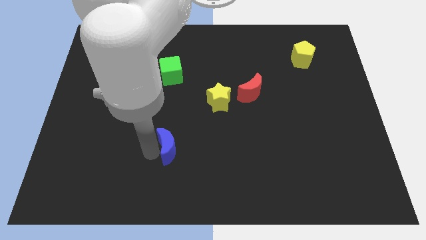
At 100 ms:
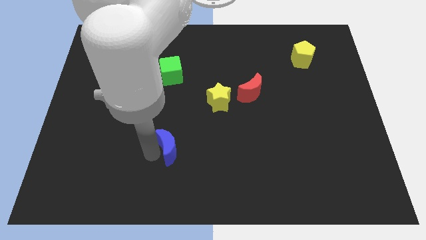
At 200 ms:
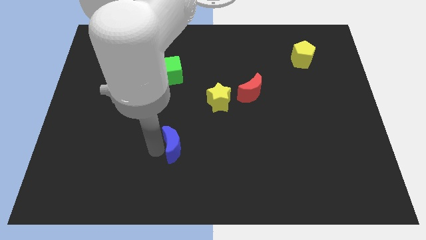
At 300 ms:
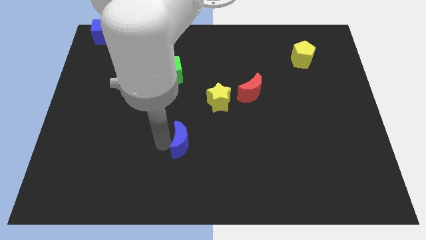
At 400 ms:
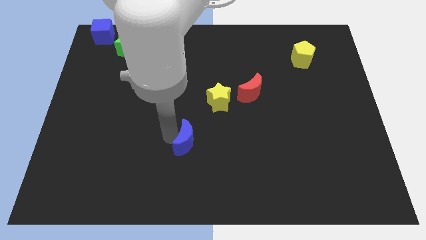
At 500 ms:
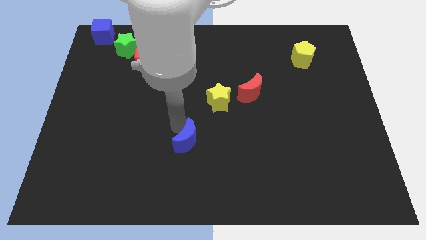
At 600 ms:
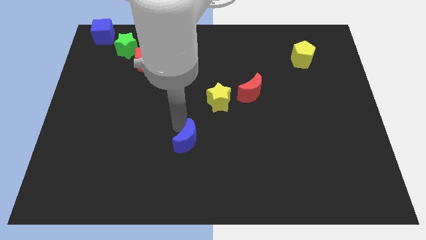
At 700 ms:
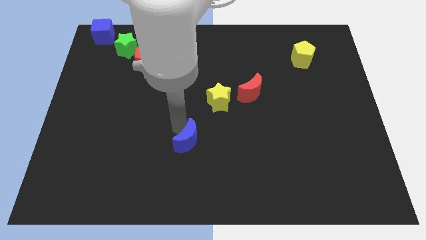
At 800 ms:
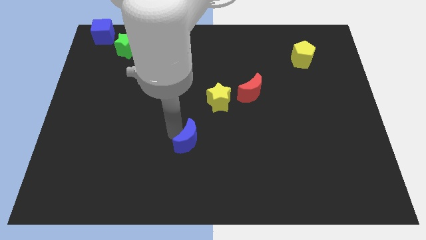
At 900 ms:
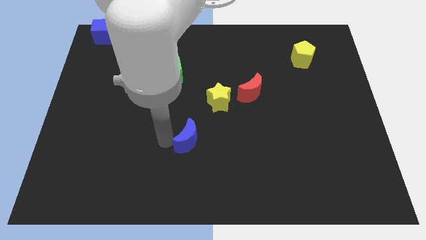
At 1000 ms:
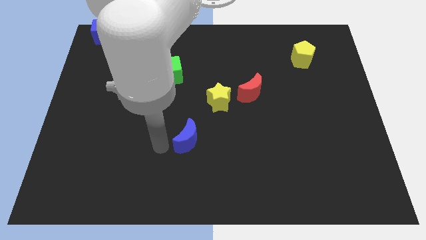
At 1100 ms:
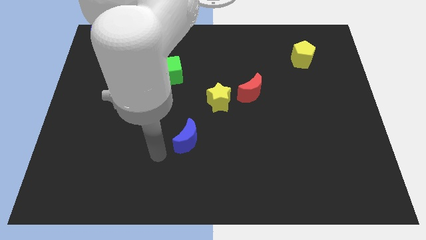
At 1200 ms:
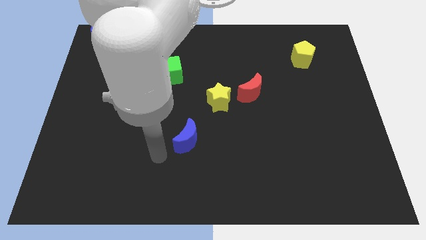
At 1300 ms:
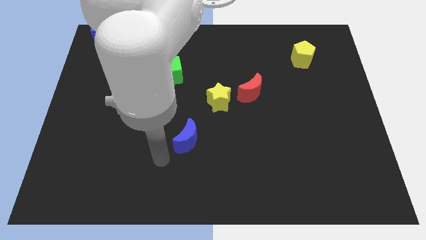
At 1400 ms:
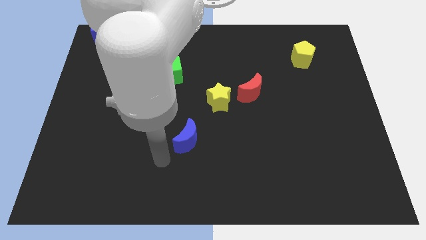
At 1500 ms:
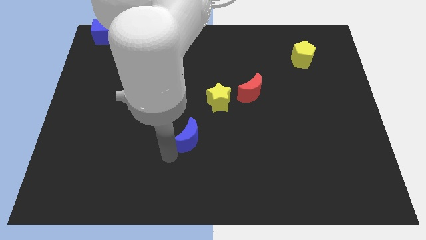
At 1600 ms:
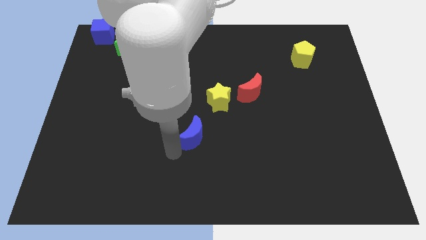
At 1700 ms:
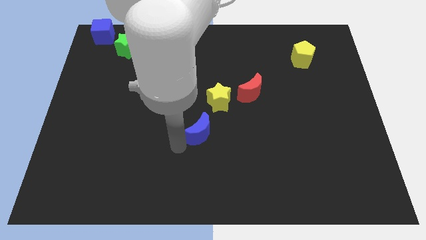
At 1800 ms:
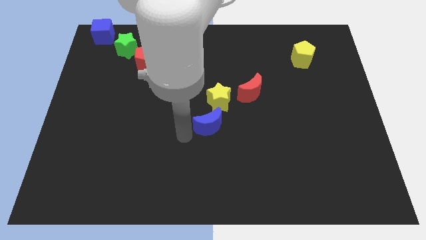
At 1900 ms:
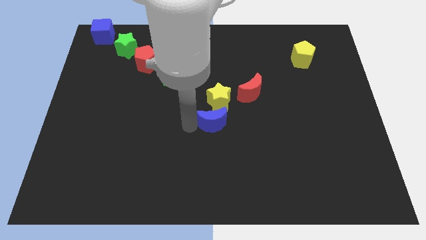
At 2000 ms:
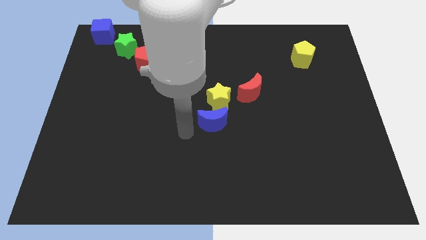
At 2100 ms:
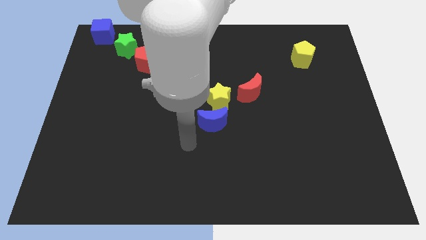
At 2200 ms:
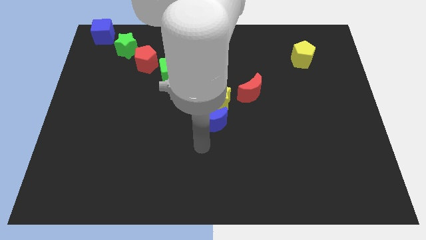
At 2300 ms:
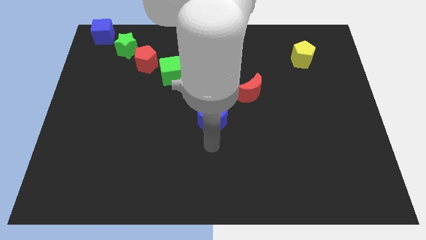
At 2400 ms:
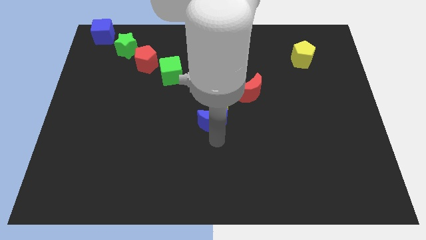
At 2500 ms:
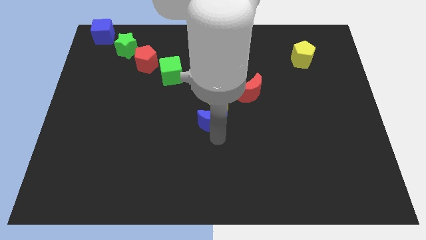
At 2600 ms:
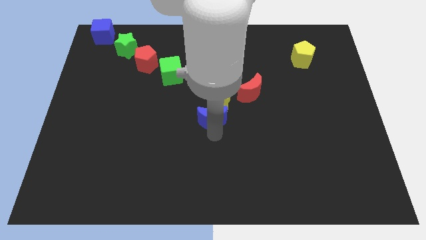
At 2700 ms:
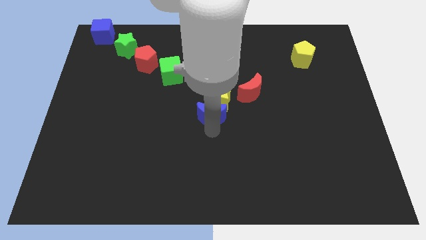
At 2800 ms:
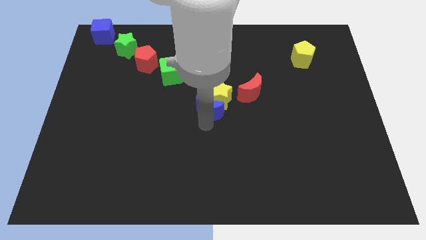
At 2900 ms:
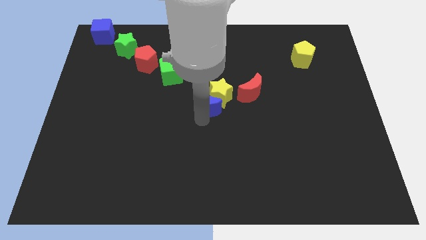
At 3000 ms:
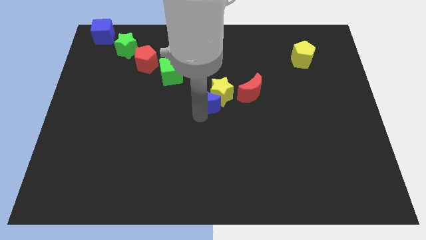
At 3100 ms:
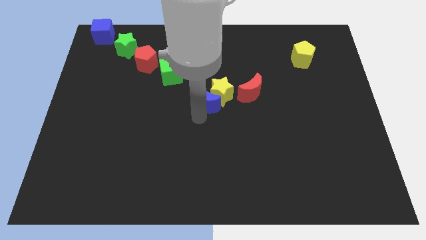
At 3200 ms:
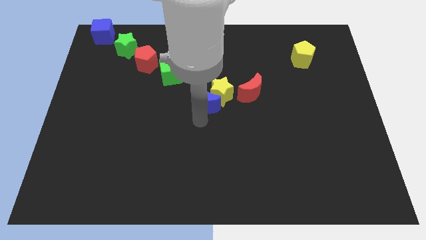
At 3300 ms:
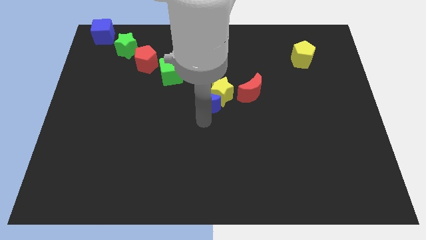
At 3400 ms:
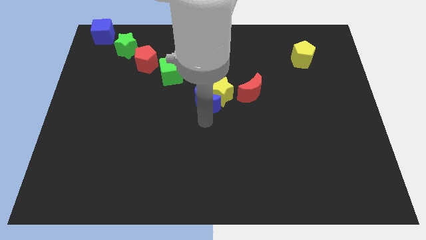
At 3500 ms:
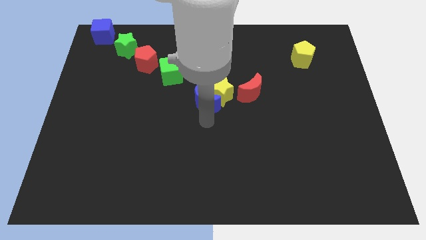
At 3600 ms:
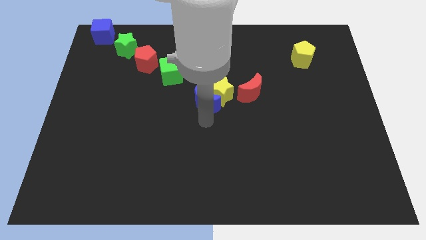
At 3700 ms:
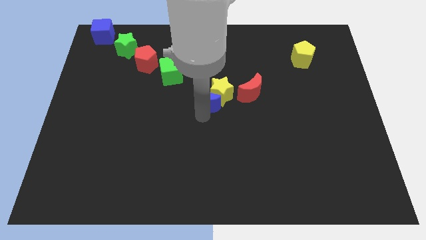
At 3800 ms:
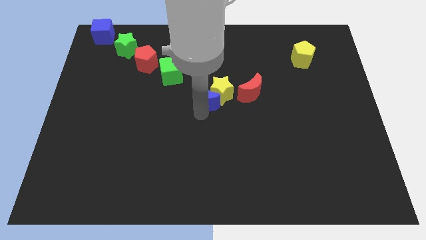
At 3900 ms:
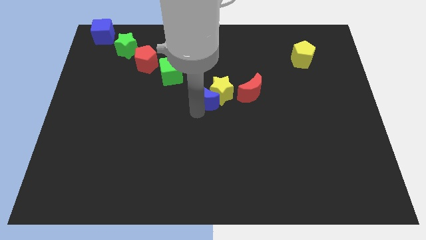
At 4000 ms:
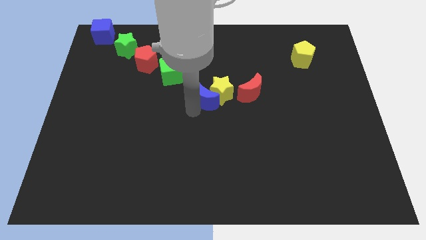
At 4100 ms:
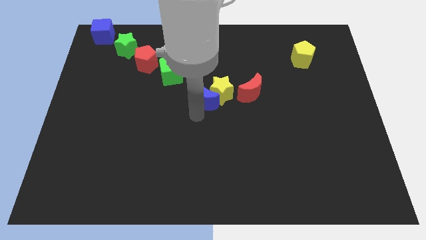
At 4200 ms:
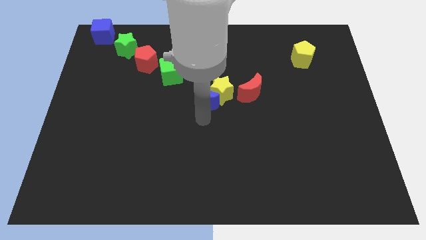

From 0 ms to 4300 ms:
move the blue moon and yellow star slightly to p

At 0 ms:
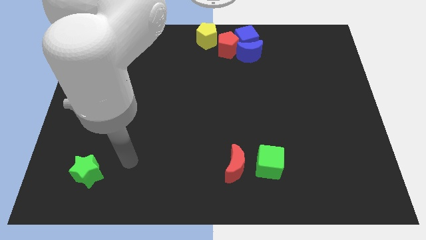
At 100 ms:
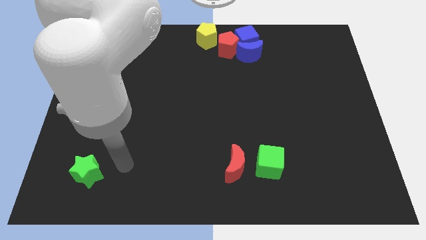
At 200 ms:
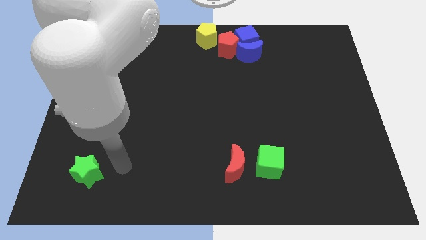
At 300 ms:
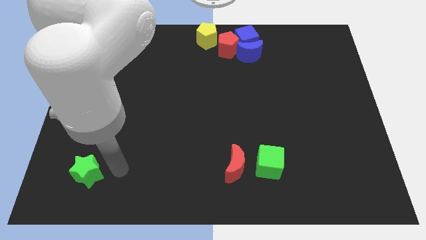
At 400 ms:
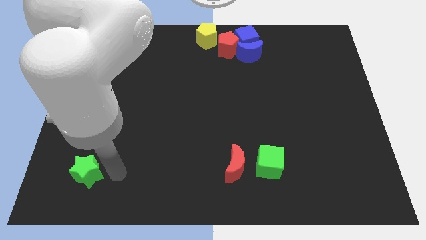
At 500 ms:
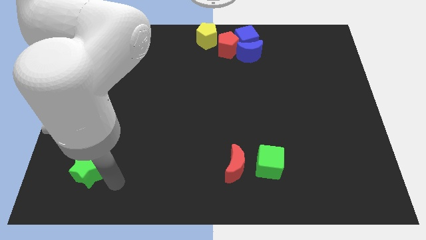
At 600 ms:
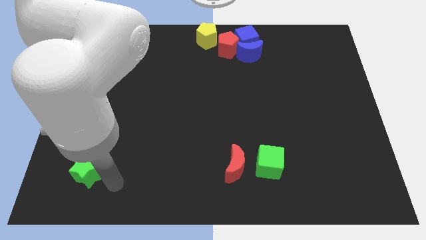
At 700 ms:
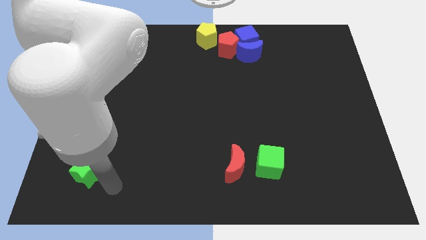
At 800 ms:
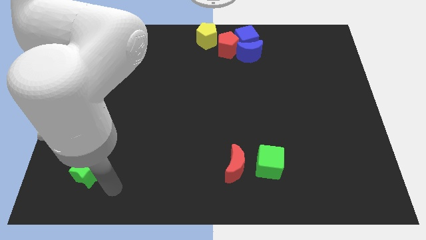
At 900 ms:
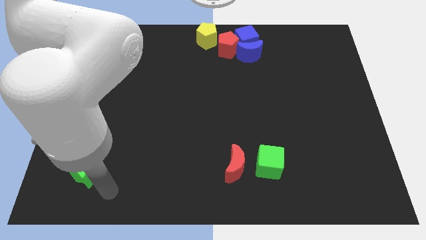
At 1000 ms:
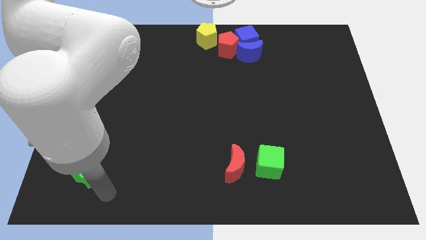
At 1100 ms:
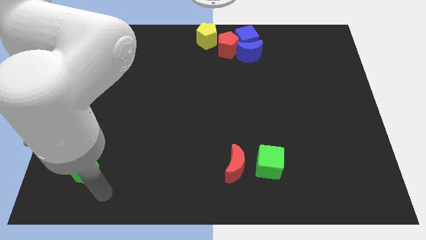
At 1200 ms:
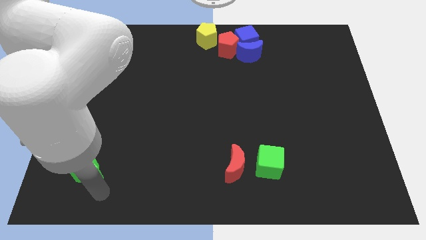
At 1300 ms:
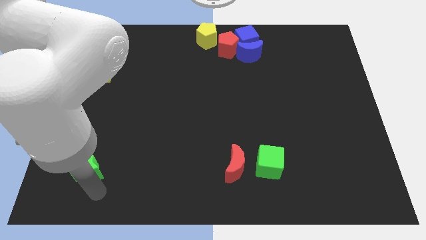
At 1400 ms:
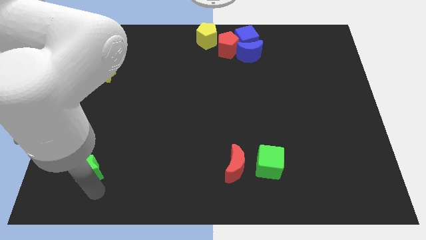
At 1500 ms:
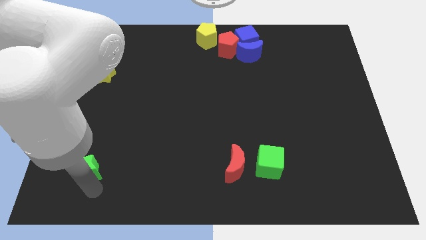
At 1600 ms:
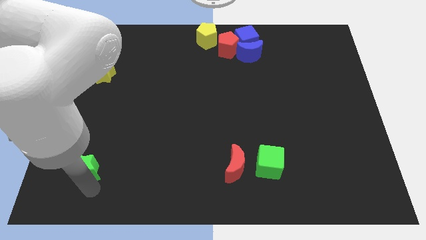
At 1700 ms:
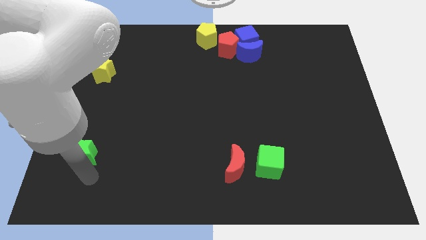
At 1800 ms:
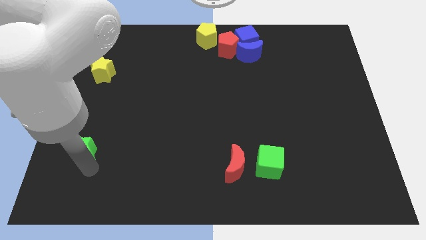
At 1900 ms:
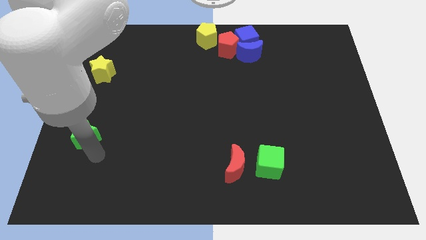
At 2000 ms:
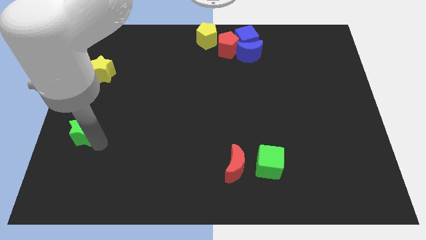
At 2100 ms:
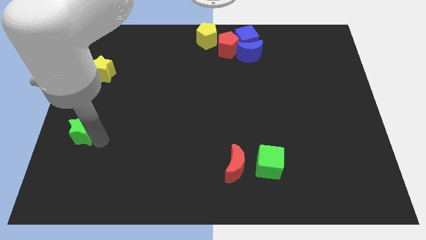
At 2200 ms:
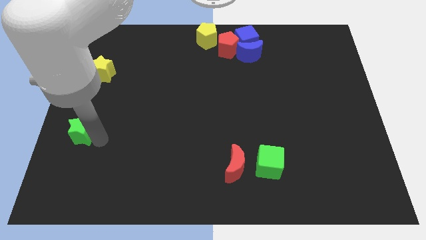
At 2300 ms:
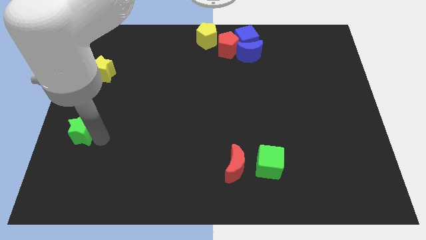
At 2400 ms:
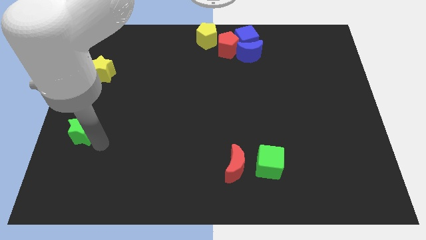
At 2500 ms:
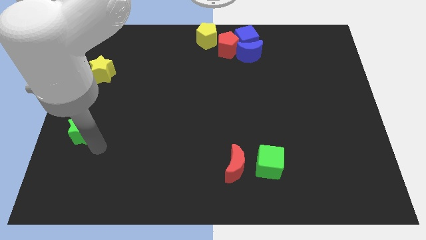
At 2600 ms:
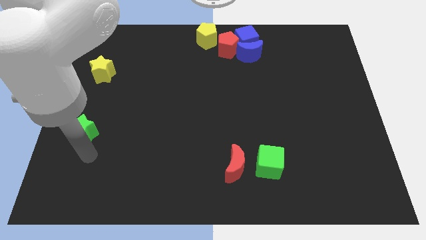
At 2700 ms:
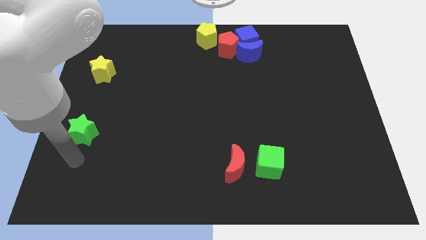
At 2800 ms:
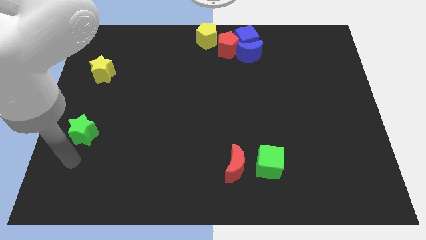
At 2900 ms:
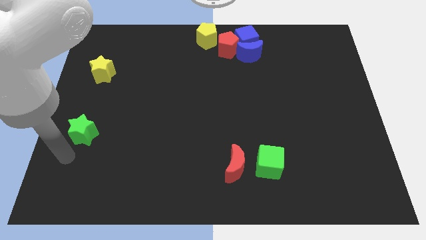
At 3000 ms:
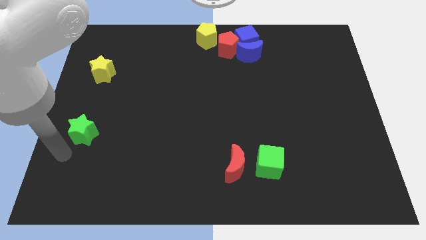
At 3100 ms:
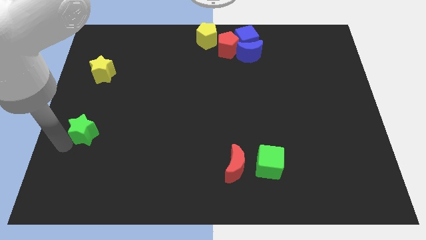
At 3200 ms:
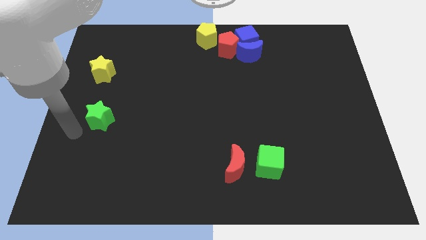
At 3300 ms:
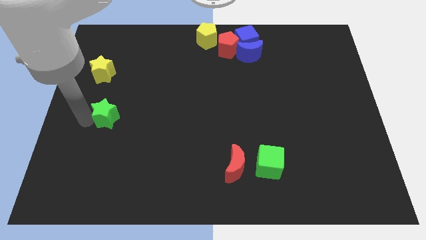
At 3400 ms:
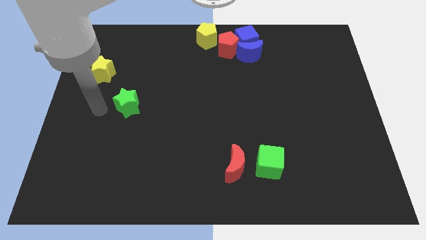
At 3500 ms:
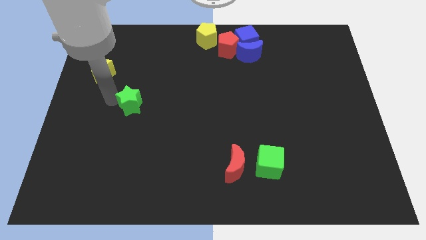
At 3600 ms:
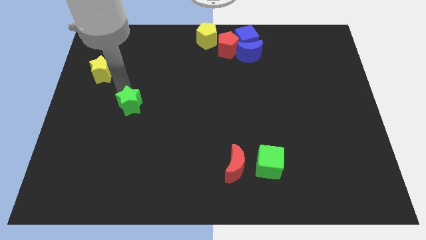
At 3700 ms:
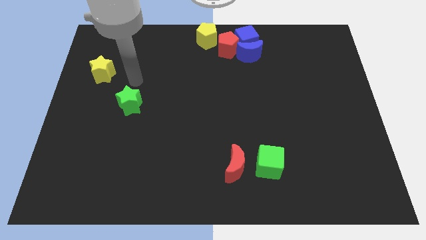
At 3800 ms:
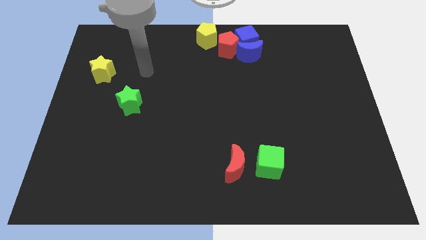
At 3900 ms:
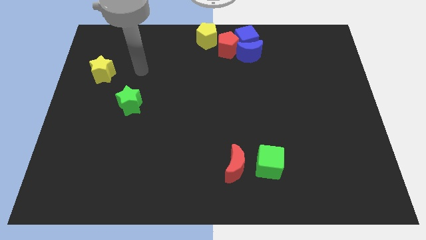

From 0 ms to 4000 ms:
place the green star to the right side of yellow star

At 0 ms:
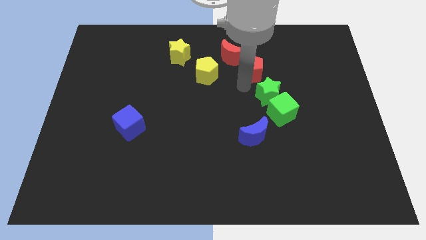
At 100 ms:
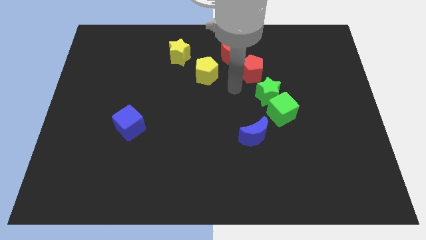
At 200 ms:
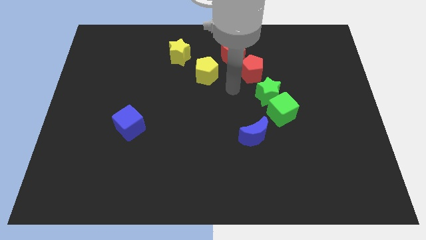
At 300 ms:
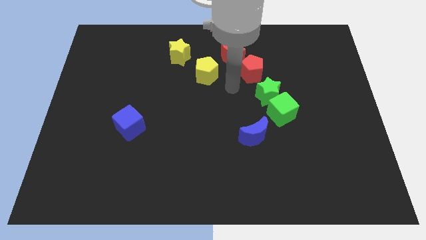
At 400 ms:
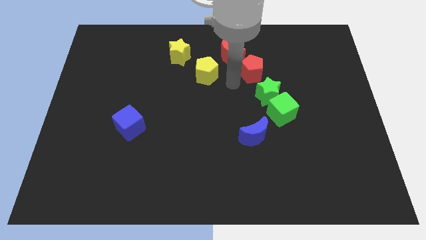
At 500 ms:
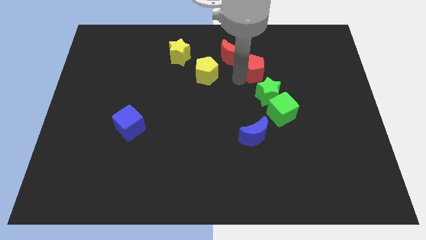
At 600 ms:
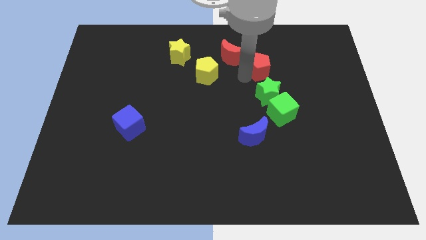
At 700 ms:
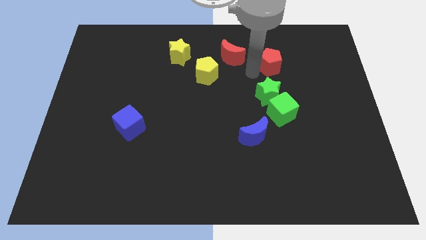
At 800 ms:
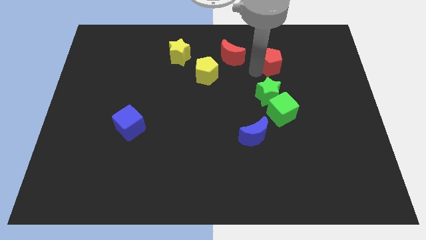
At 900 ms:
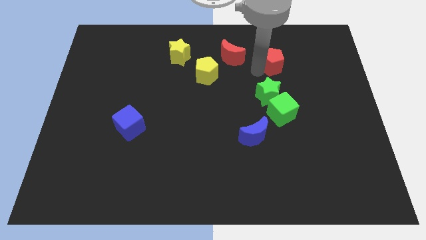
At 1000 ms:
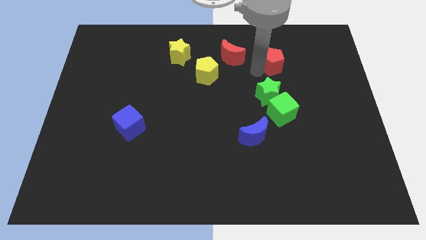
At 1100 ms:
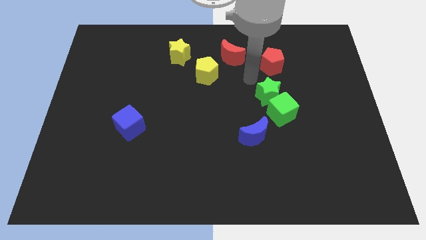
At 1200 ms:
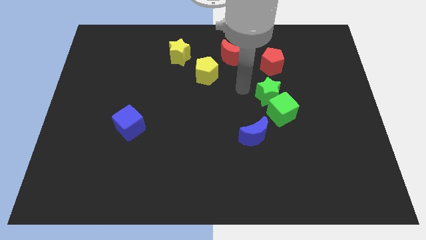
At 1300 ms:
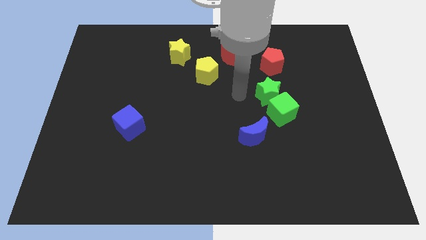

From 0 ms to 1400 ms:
move the red pentagon to the top side of the green star
